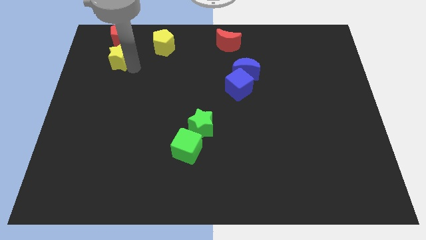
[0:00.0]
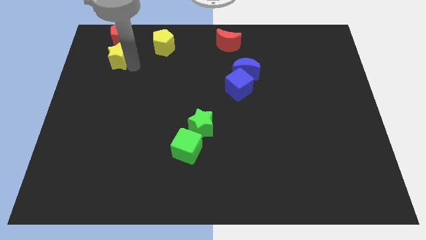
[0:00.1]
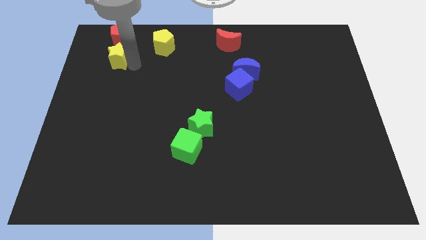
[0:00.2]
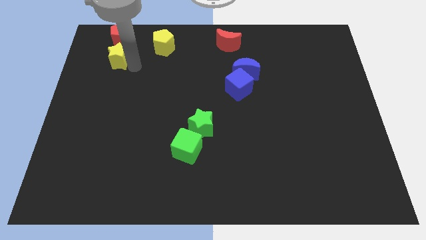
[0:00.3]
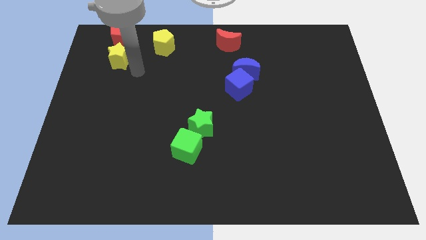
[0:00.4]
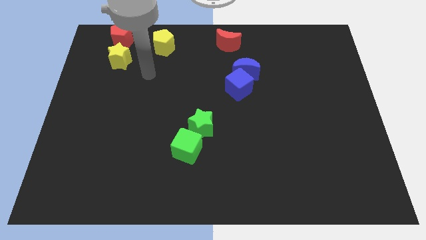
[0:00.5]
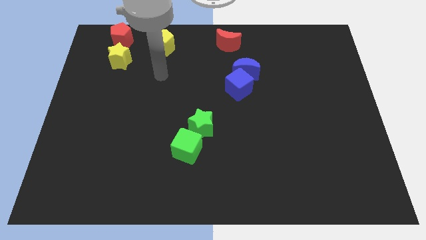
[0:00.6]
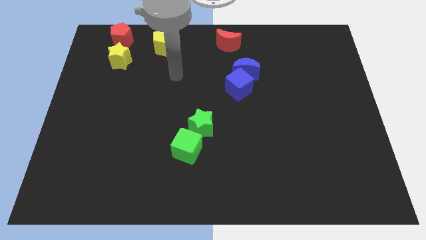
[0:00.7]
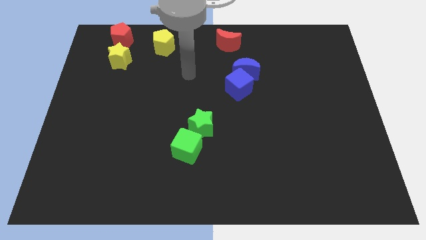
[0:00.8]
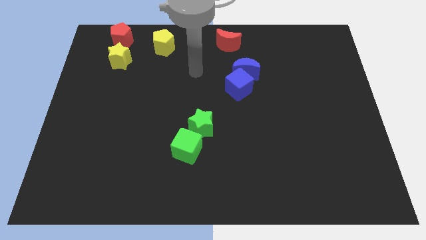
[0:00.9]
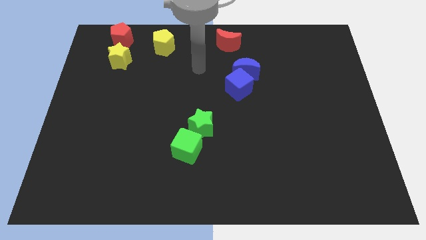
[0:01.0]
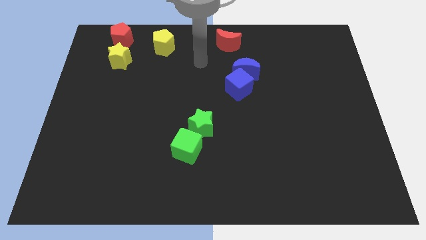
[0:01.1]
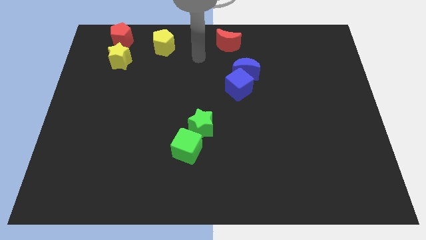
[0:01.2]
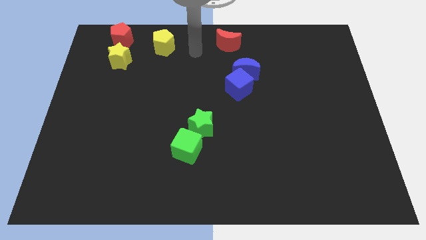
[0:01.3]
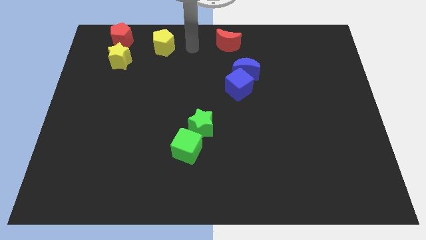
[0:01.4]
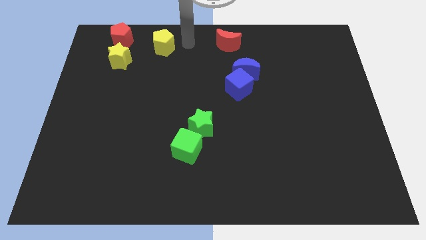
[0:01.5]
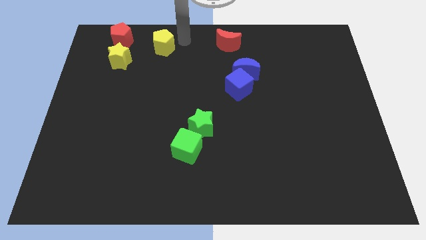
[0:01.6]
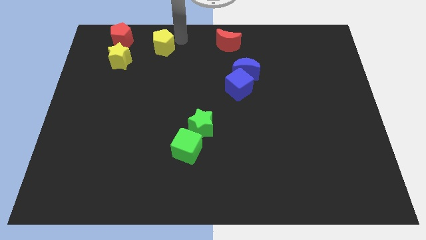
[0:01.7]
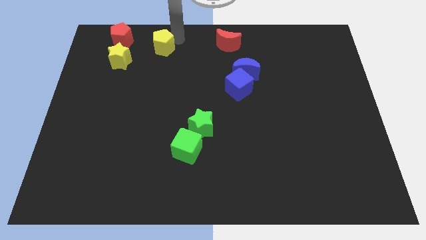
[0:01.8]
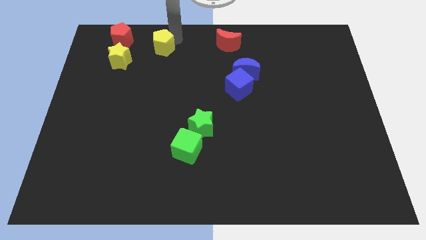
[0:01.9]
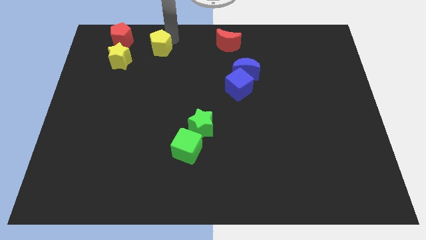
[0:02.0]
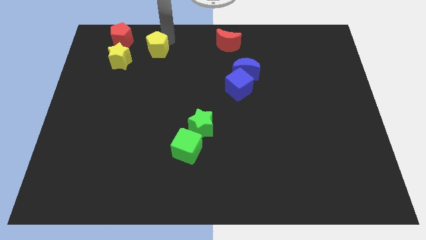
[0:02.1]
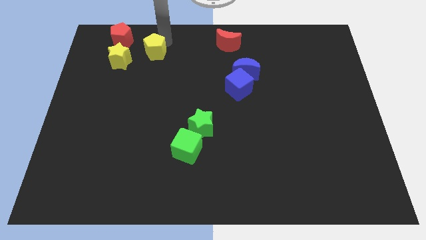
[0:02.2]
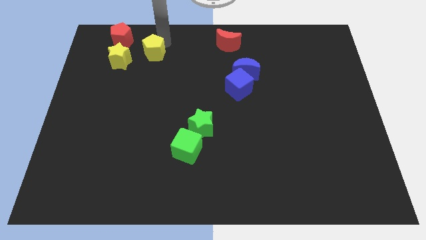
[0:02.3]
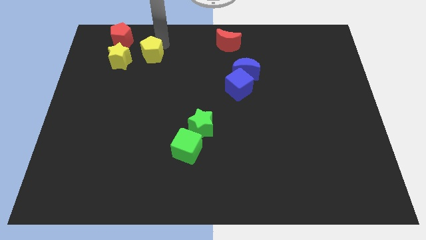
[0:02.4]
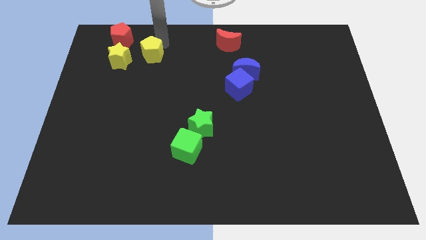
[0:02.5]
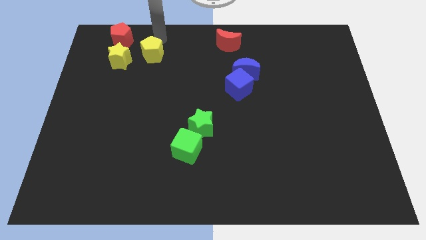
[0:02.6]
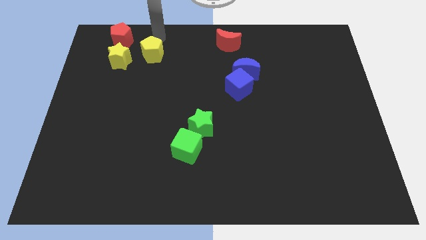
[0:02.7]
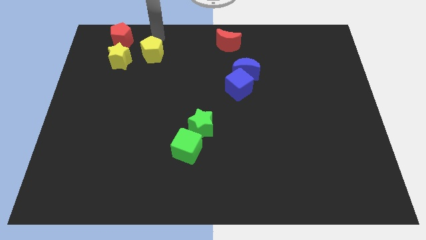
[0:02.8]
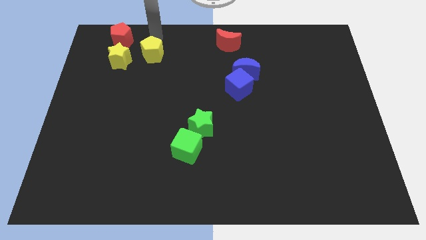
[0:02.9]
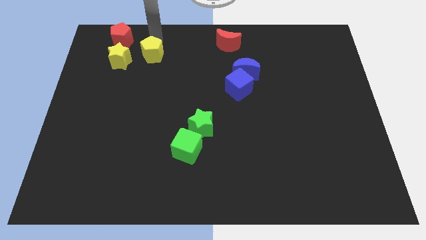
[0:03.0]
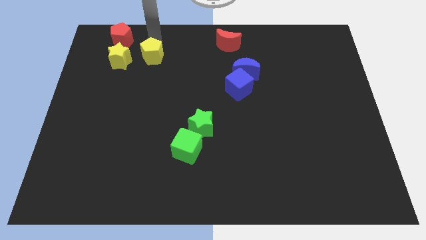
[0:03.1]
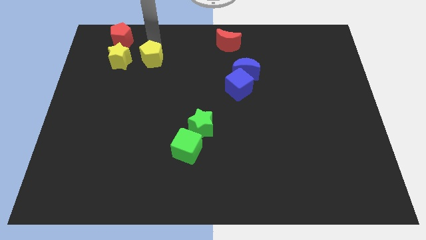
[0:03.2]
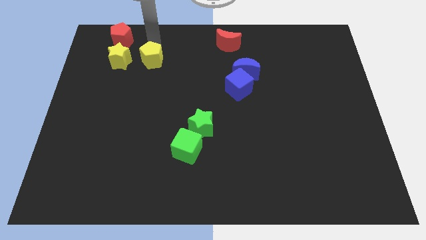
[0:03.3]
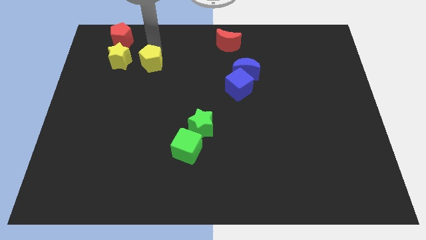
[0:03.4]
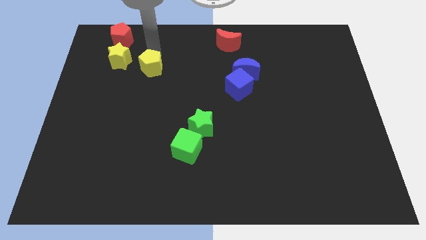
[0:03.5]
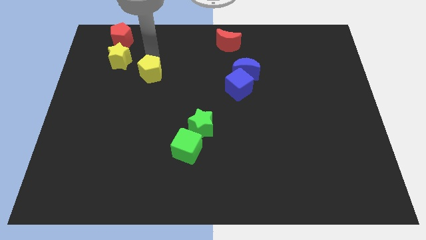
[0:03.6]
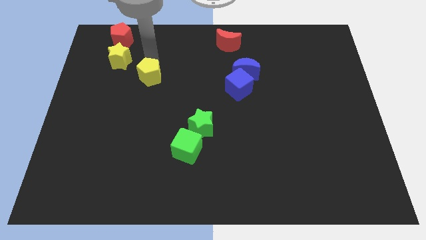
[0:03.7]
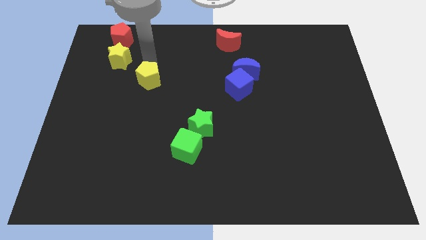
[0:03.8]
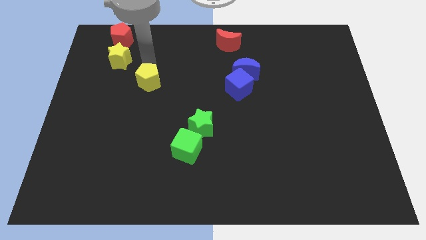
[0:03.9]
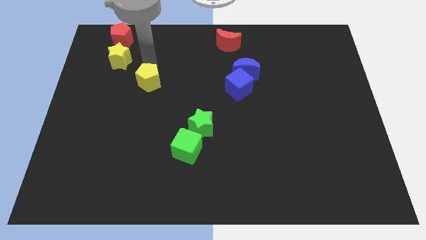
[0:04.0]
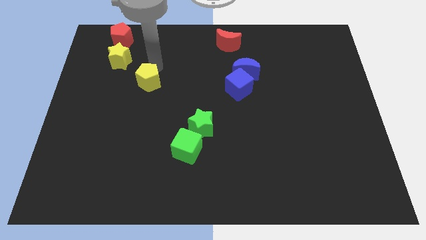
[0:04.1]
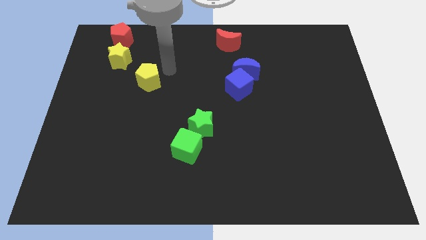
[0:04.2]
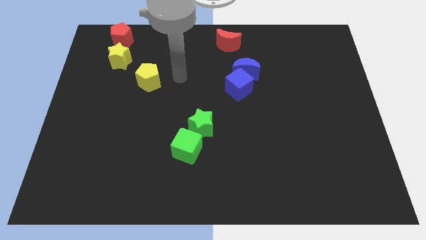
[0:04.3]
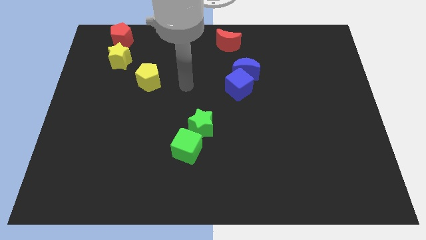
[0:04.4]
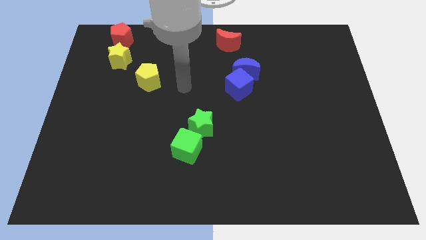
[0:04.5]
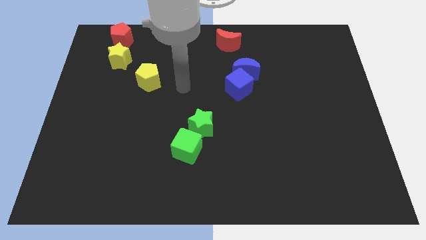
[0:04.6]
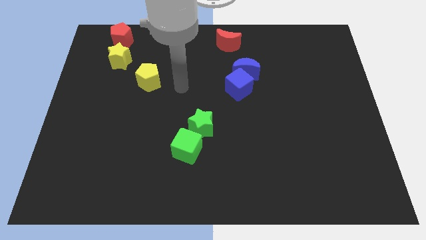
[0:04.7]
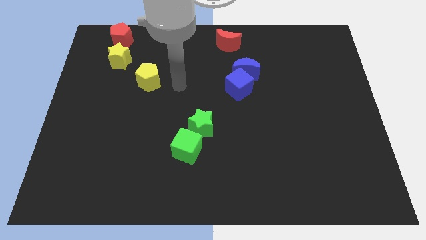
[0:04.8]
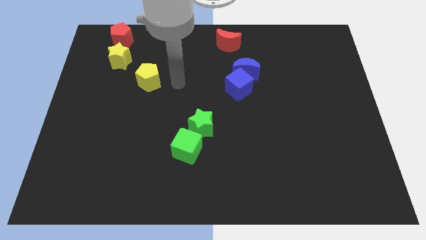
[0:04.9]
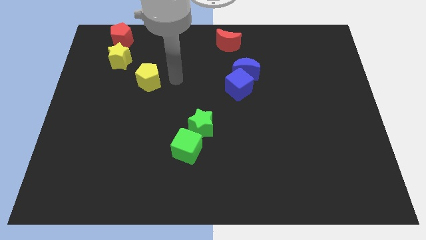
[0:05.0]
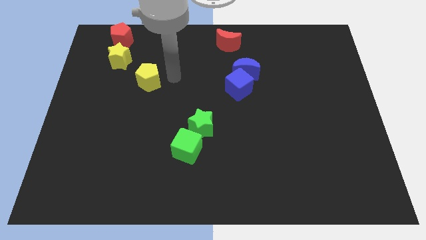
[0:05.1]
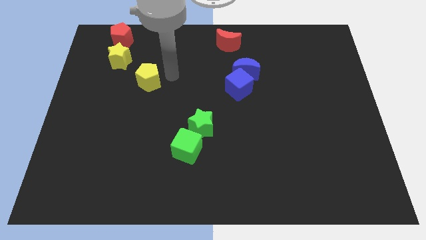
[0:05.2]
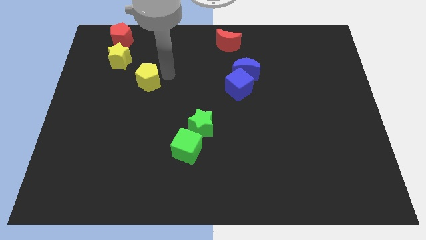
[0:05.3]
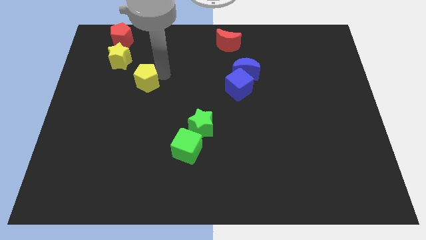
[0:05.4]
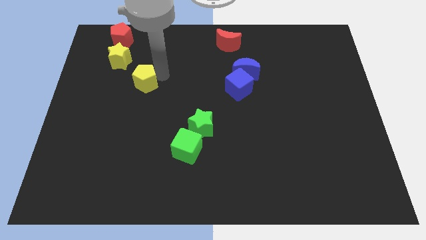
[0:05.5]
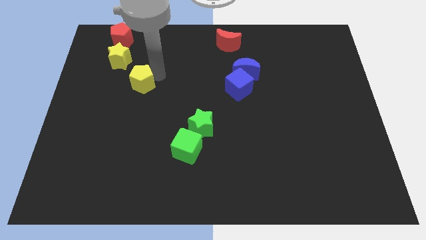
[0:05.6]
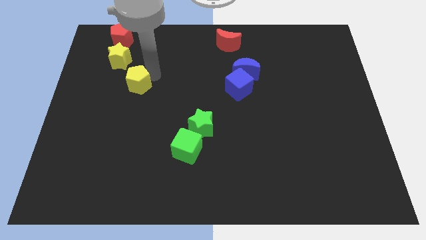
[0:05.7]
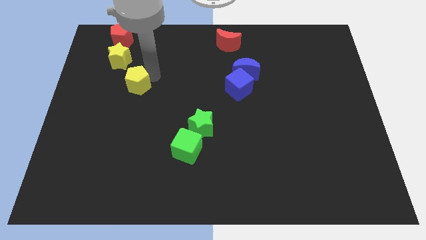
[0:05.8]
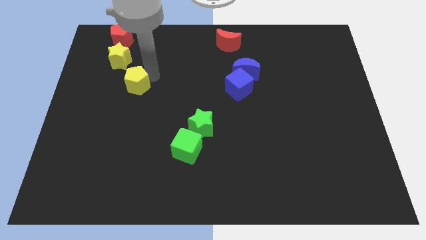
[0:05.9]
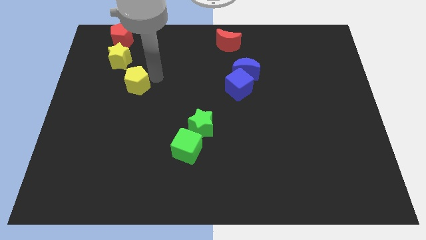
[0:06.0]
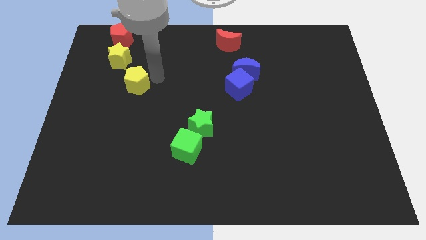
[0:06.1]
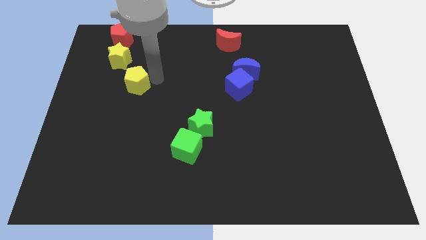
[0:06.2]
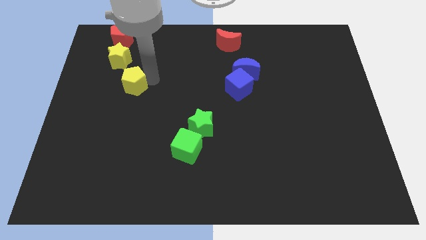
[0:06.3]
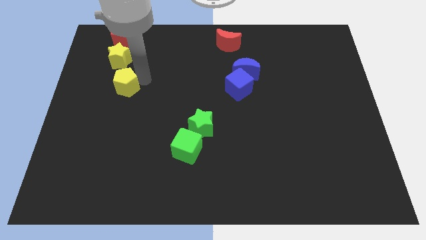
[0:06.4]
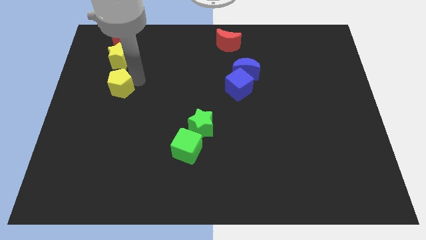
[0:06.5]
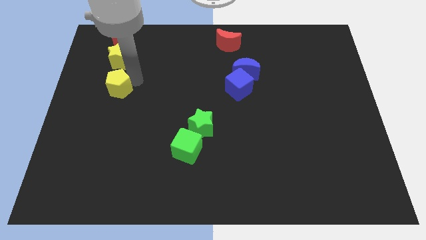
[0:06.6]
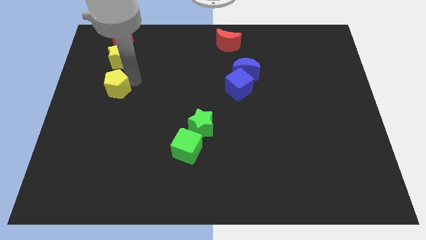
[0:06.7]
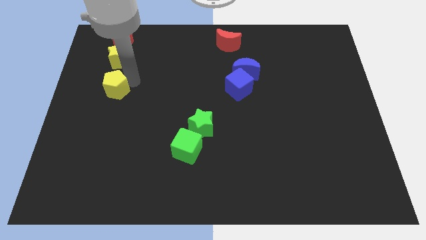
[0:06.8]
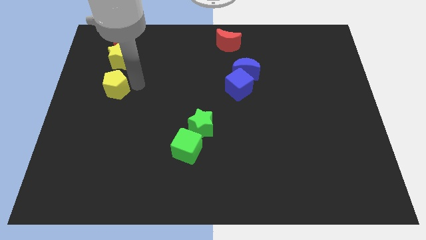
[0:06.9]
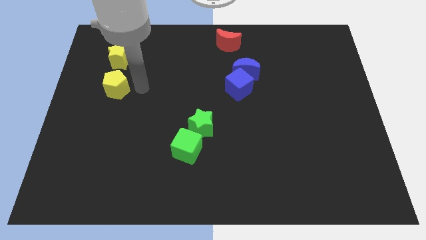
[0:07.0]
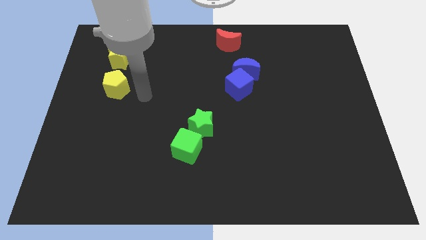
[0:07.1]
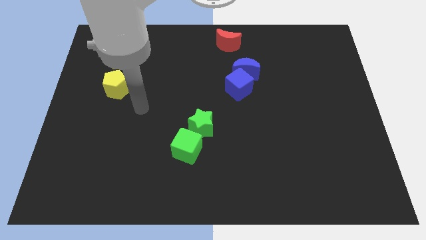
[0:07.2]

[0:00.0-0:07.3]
place the yellow pentagon below the yellow star

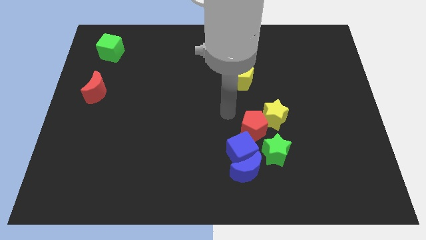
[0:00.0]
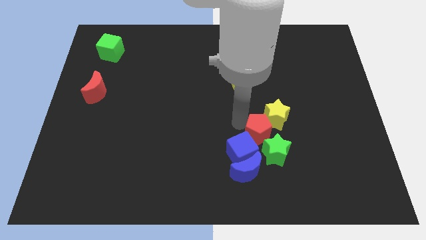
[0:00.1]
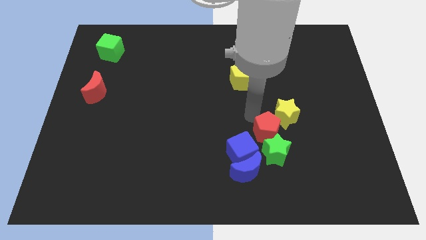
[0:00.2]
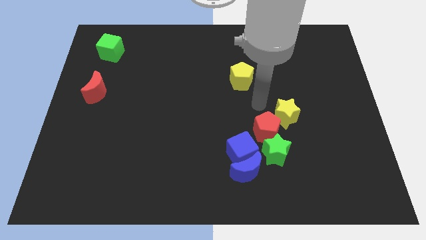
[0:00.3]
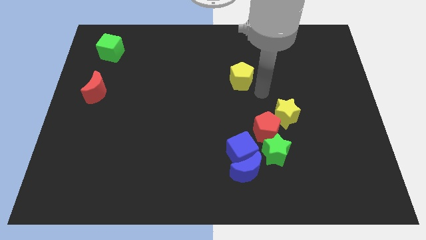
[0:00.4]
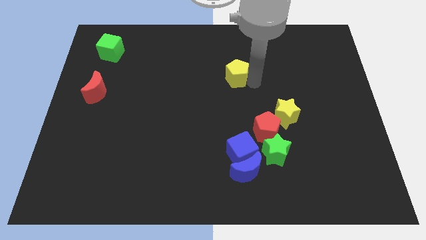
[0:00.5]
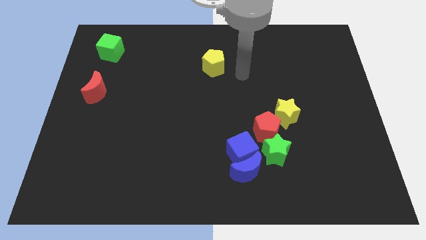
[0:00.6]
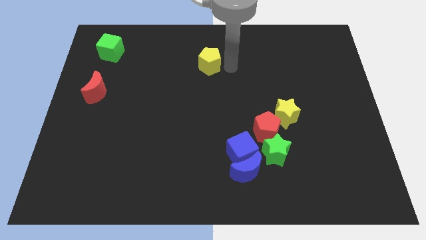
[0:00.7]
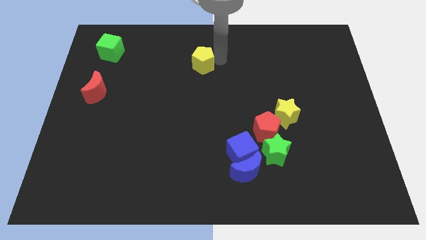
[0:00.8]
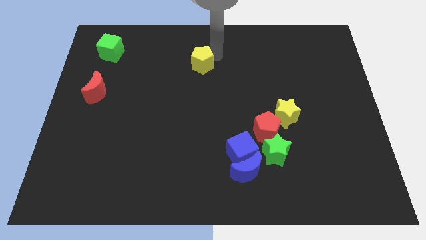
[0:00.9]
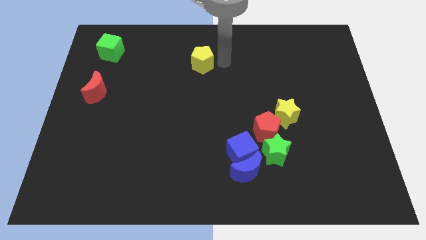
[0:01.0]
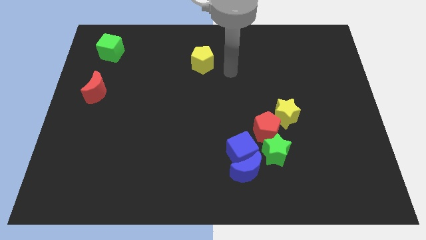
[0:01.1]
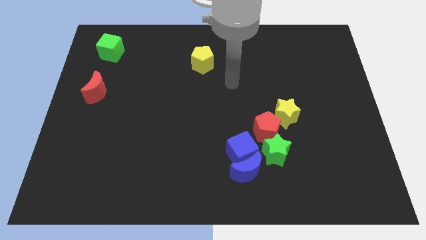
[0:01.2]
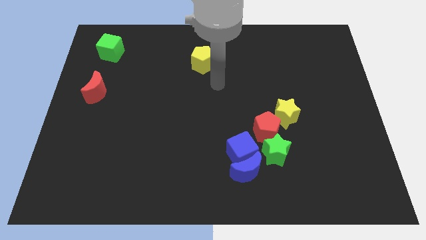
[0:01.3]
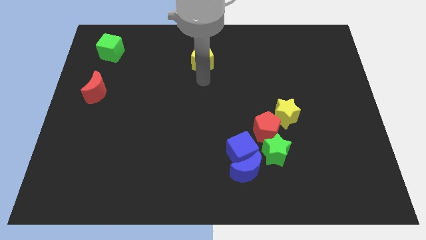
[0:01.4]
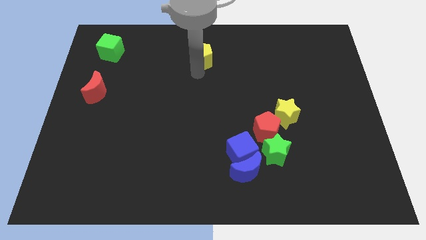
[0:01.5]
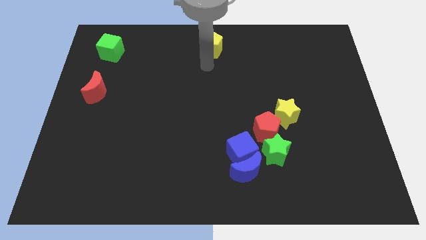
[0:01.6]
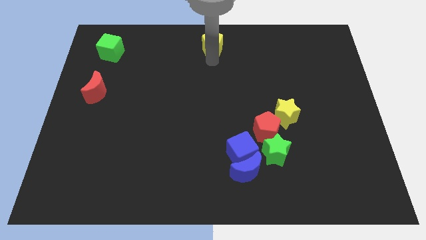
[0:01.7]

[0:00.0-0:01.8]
move yellow pentagon to the top center
